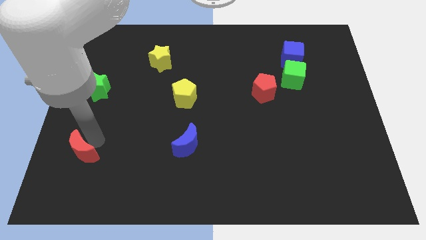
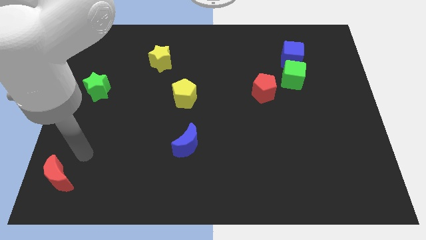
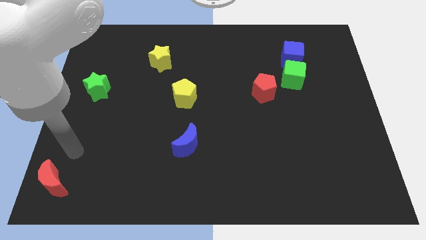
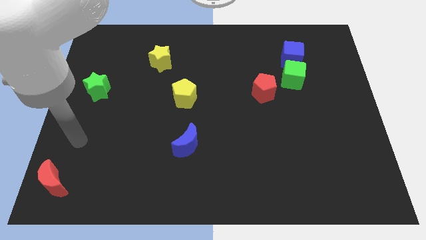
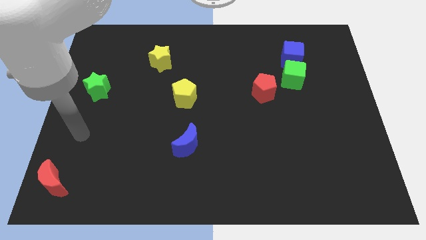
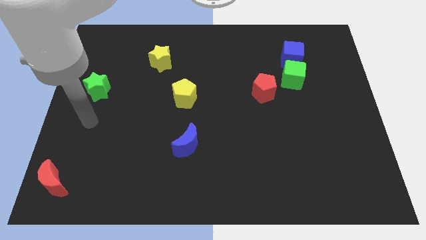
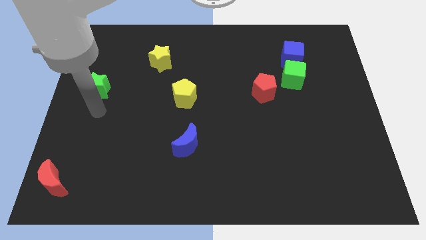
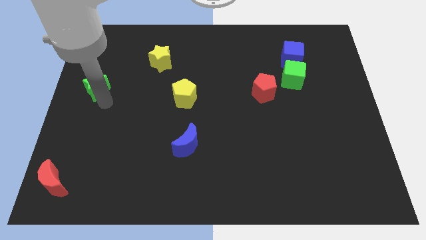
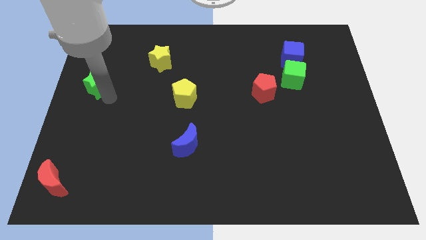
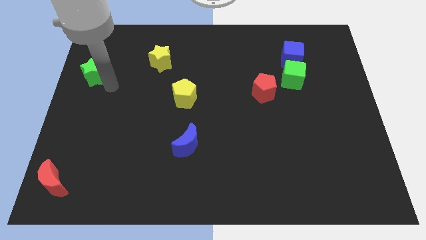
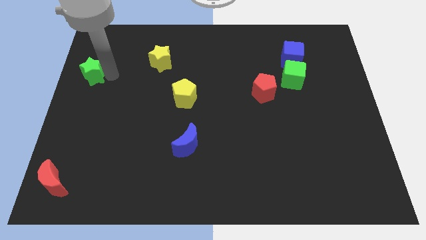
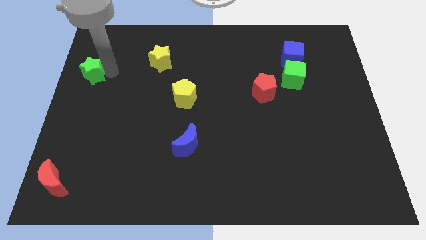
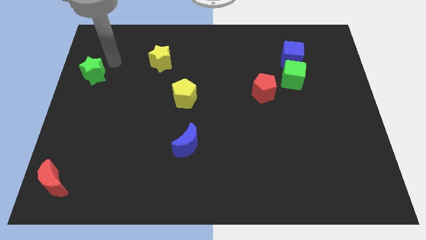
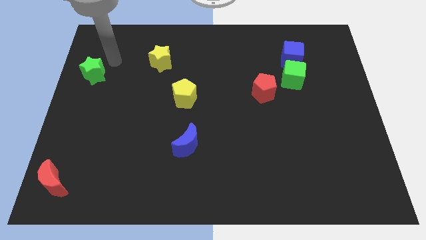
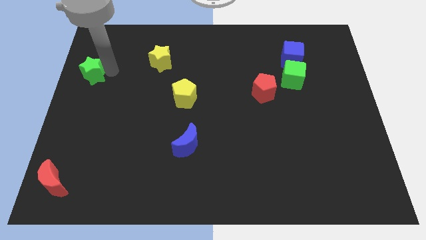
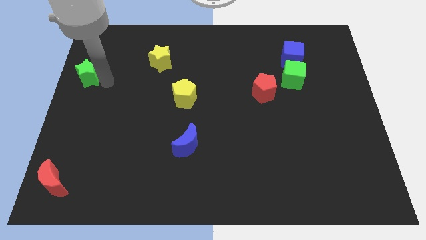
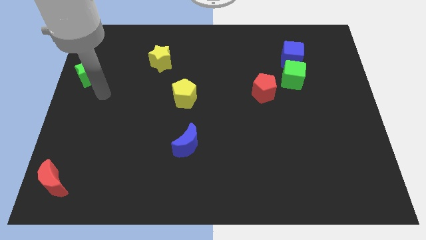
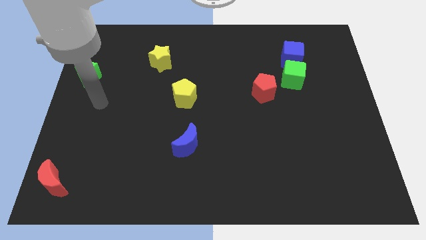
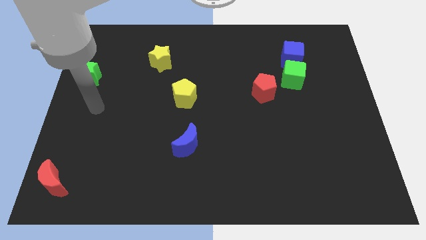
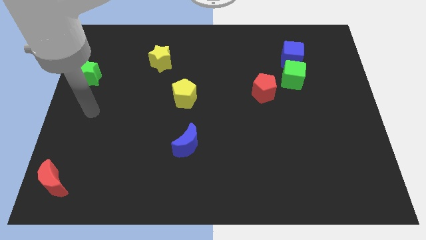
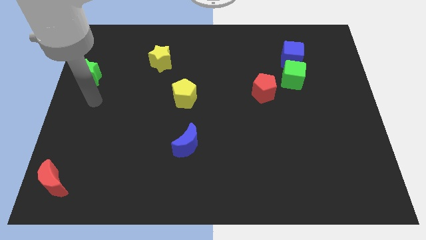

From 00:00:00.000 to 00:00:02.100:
separate green star and red moon

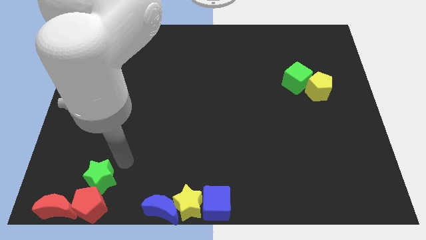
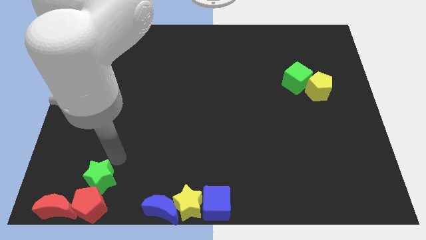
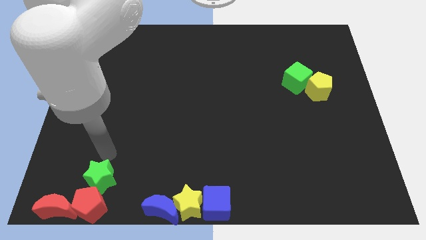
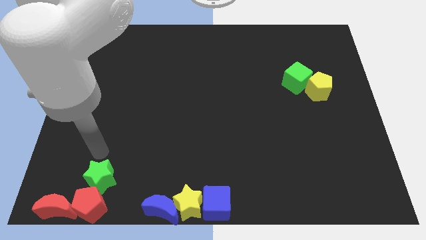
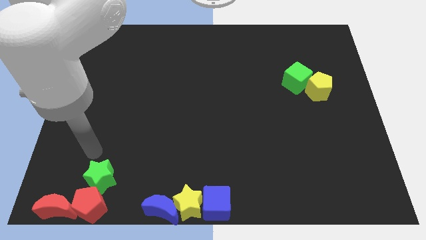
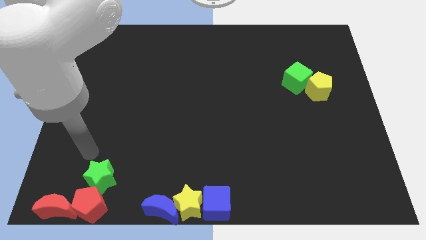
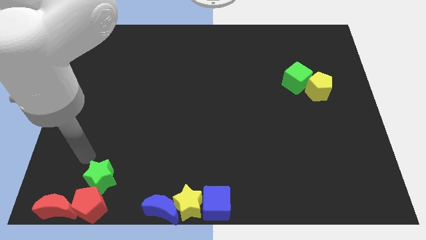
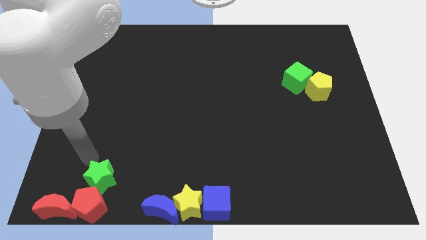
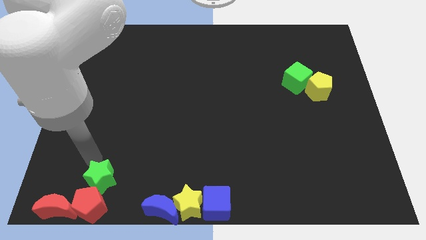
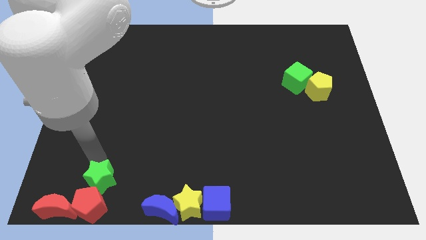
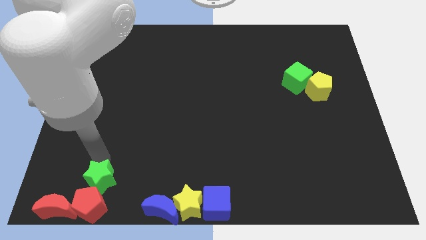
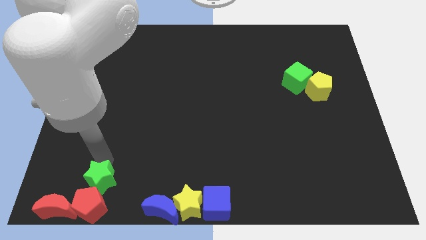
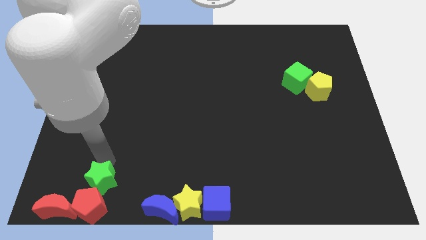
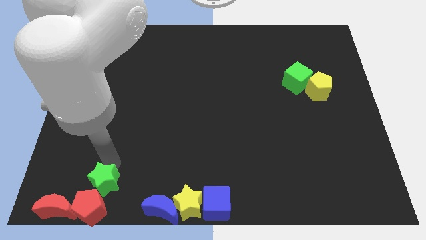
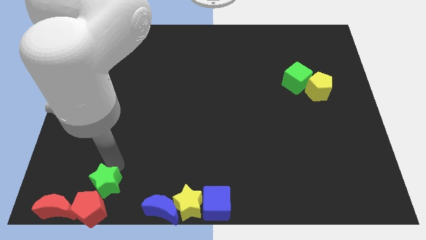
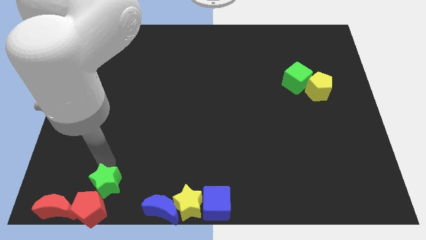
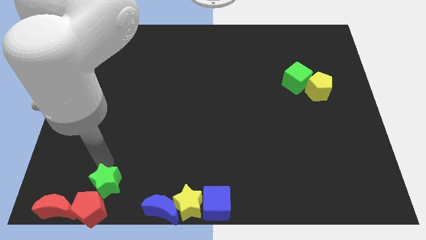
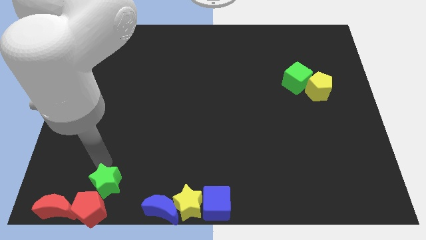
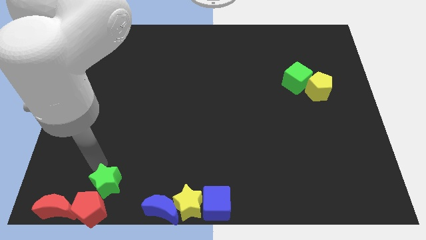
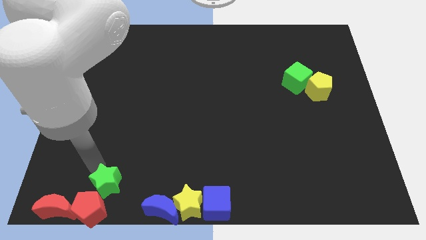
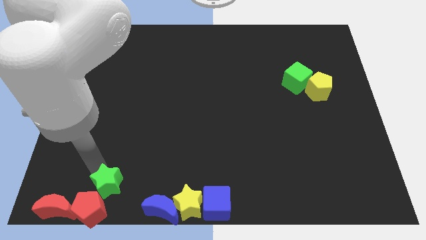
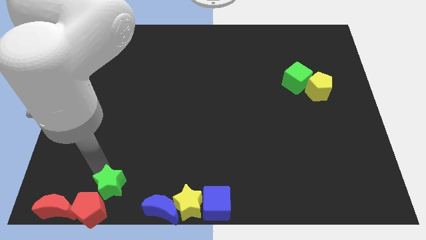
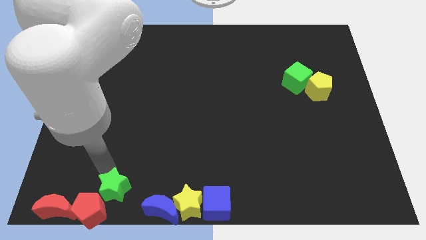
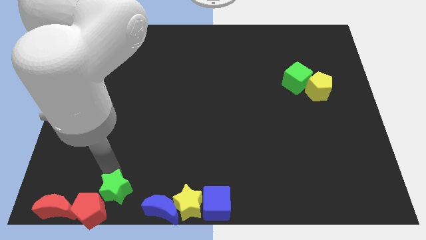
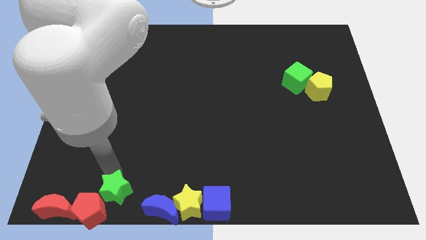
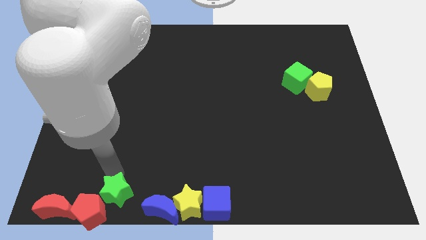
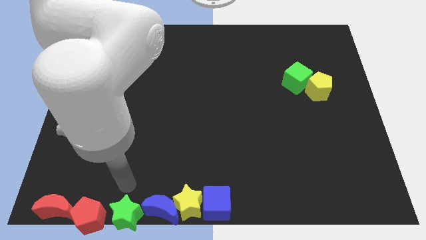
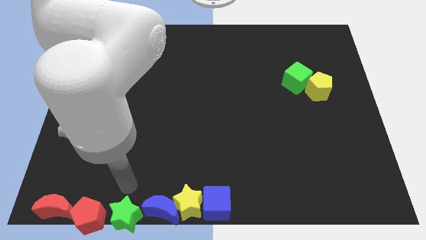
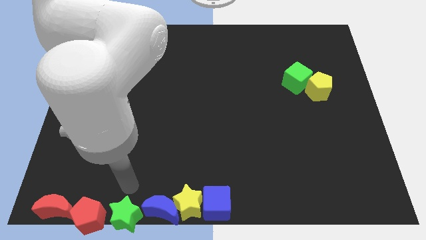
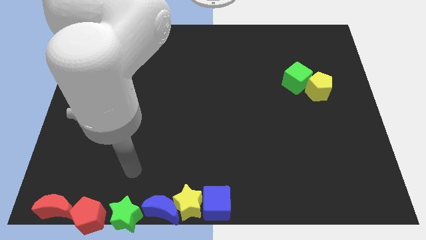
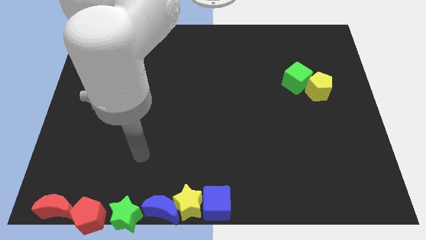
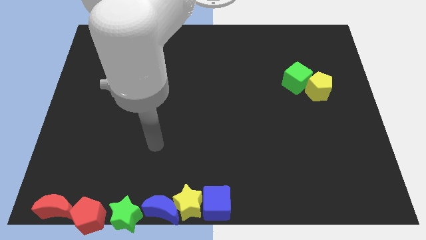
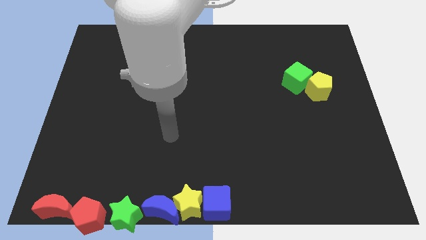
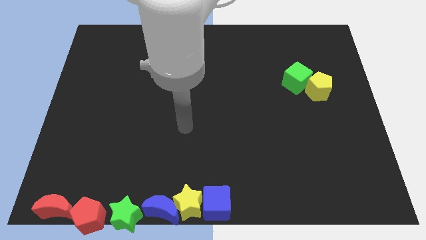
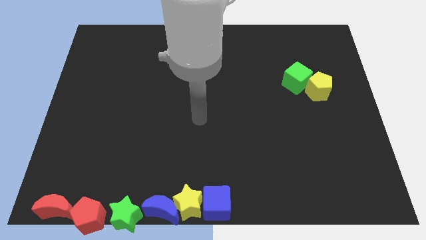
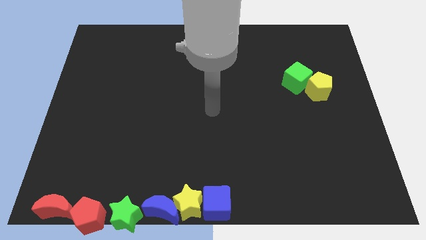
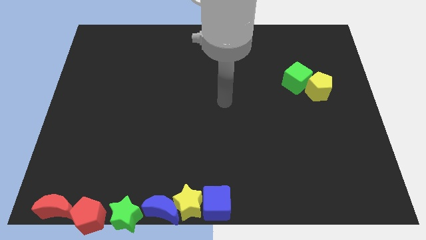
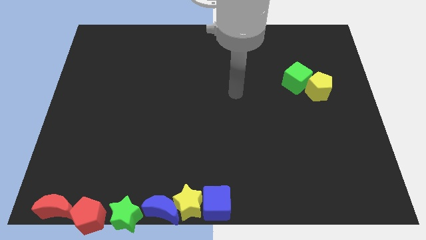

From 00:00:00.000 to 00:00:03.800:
push the green star to the right side of the red pentagon

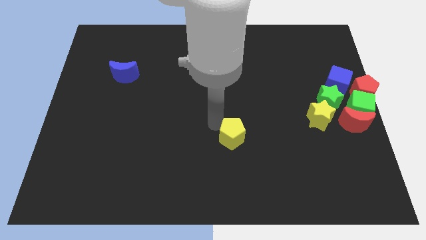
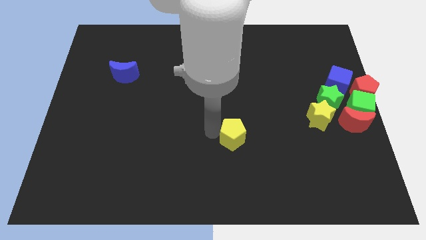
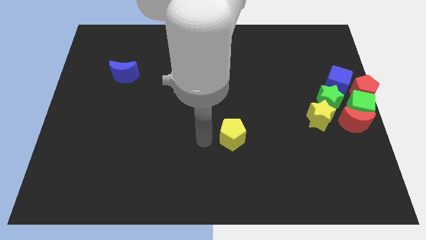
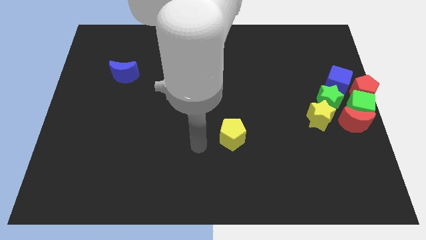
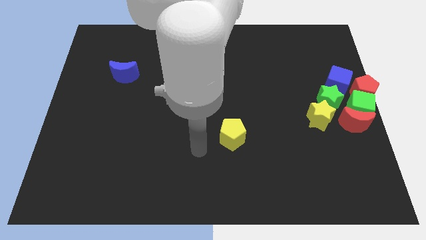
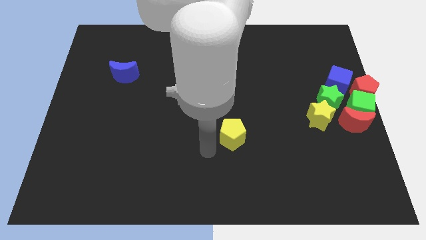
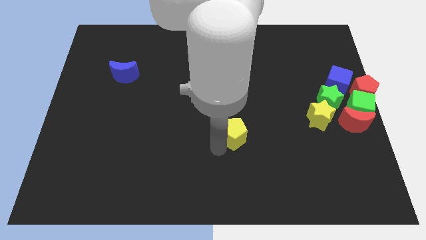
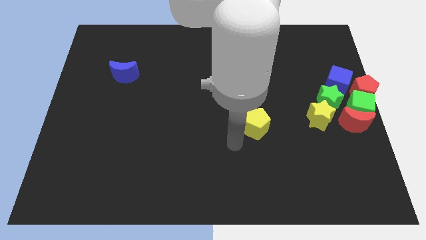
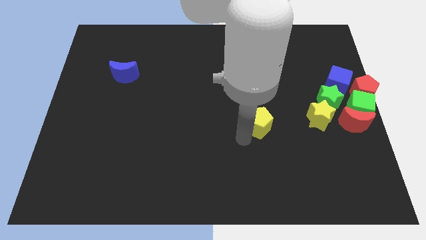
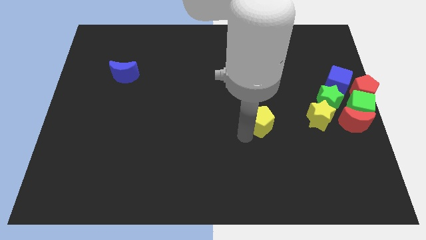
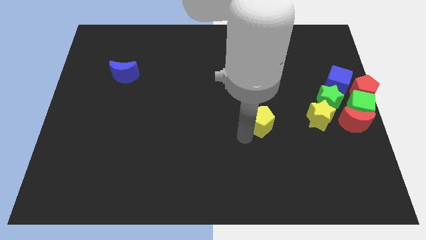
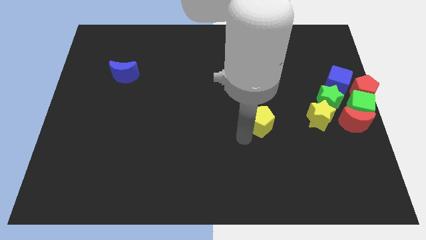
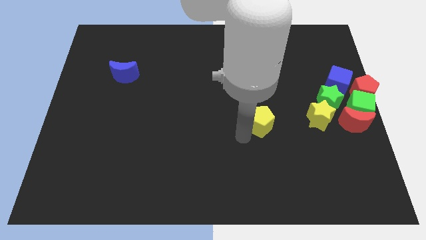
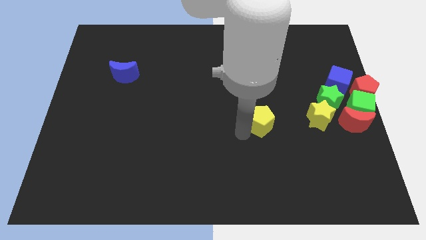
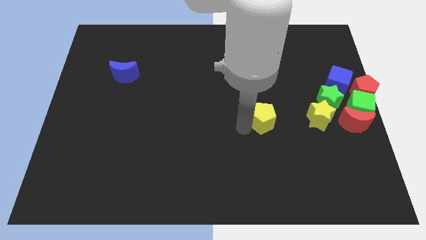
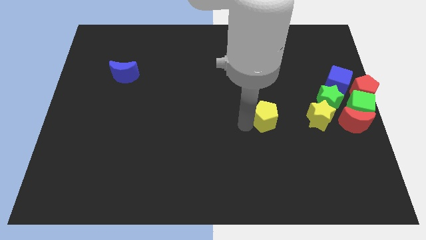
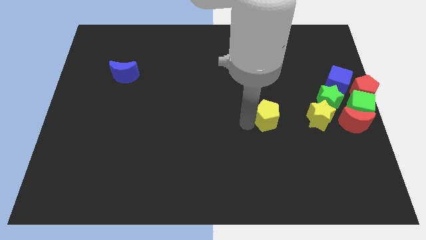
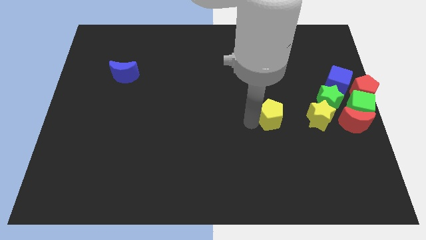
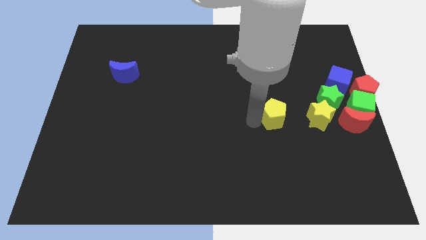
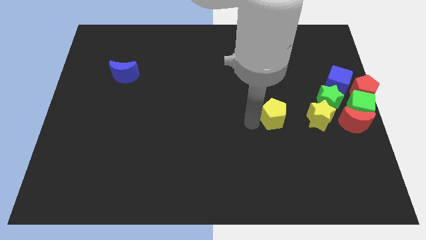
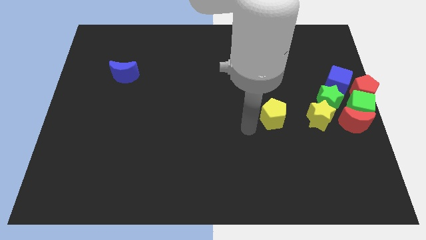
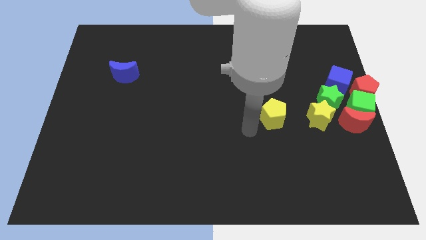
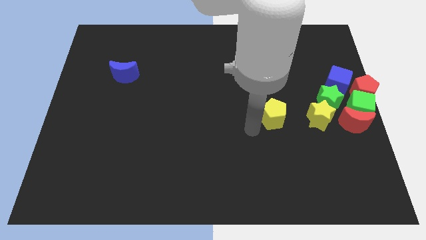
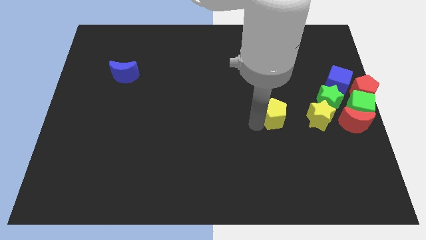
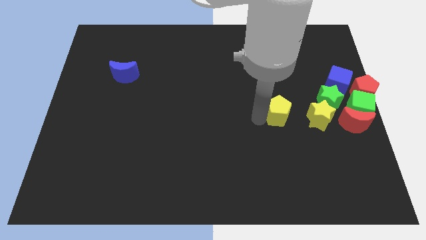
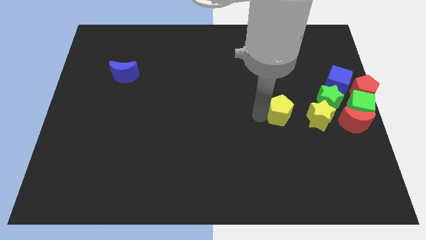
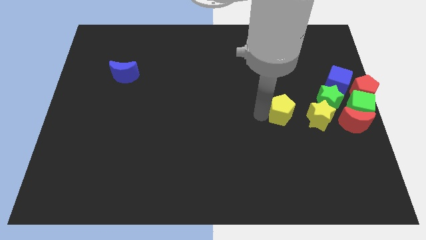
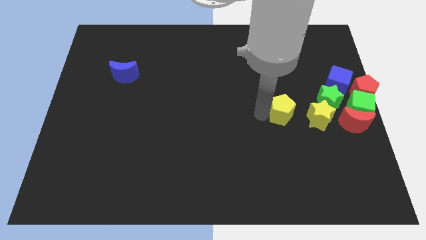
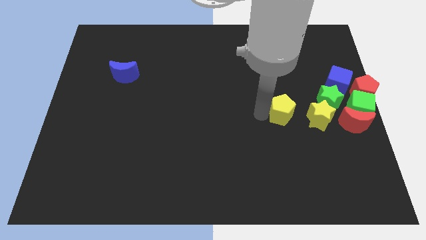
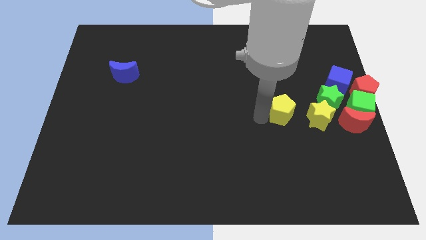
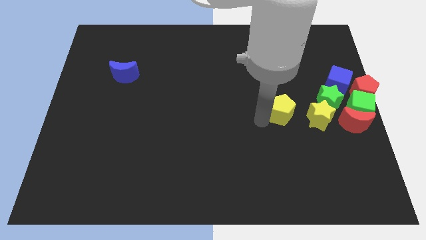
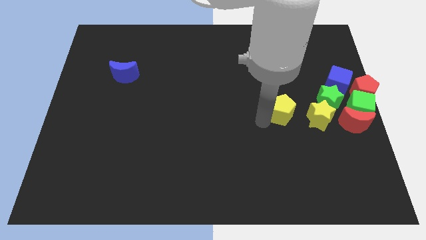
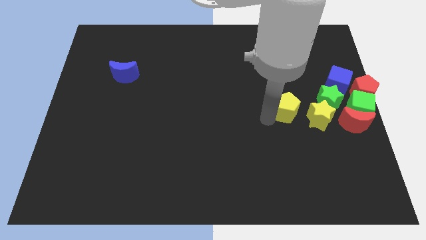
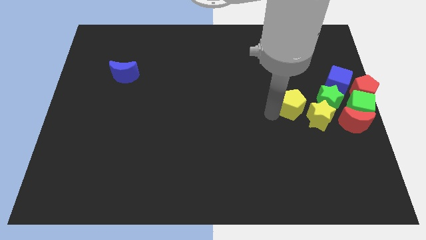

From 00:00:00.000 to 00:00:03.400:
slide the yellow pentagon left to yellow star
